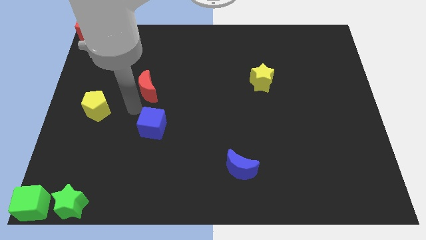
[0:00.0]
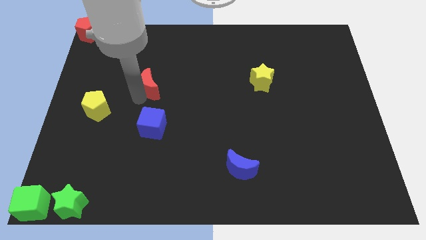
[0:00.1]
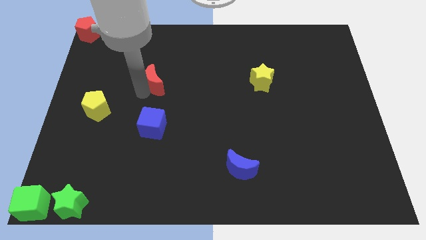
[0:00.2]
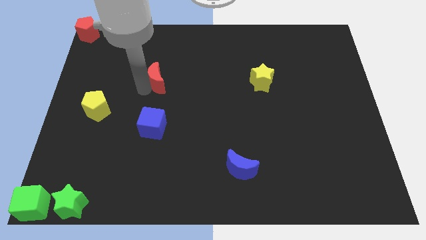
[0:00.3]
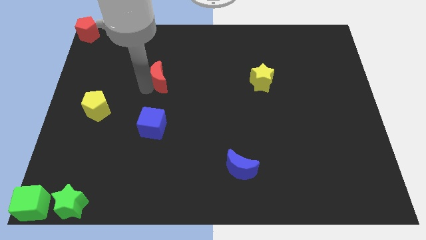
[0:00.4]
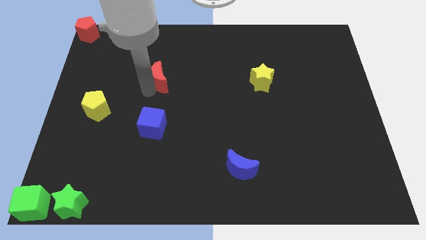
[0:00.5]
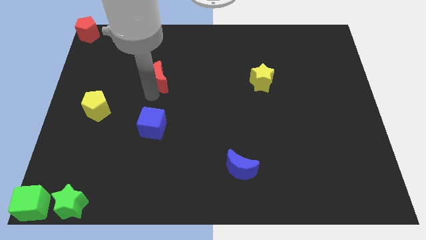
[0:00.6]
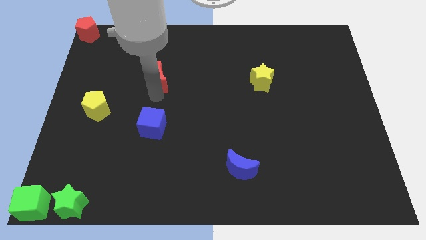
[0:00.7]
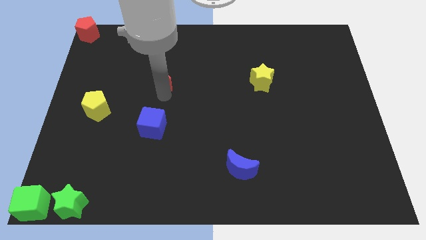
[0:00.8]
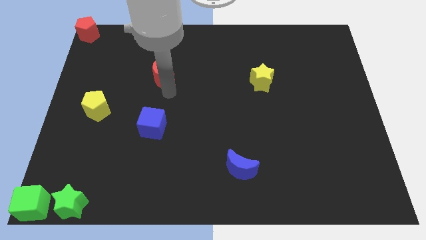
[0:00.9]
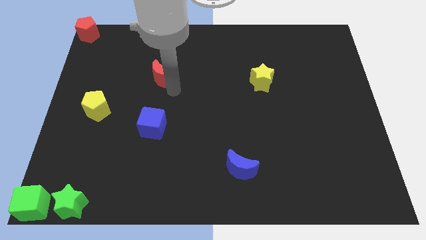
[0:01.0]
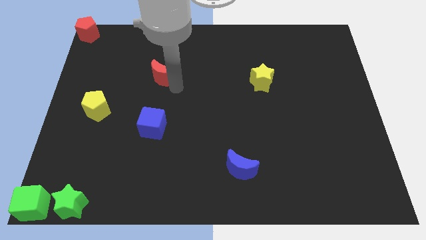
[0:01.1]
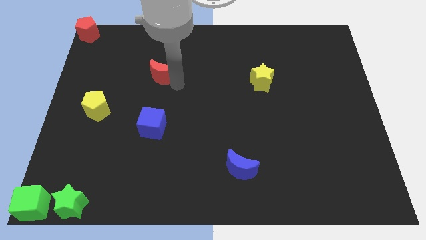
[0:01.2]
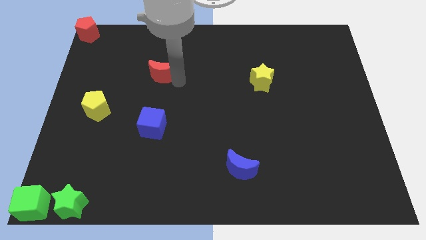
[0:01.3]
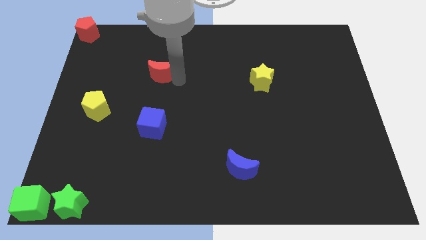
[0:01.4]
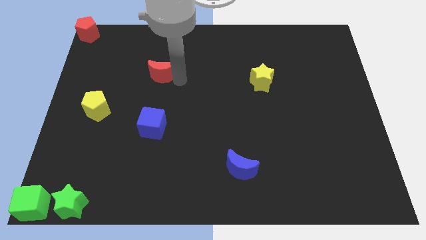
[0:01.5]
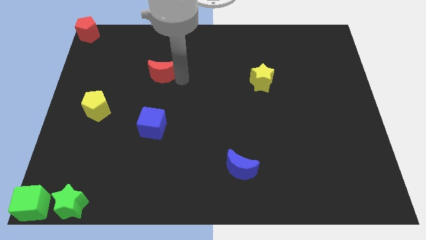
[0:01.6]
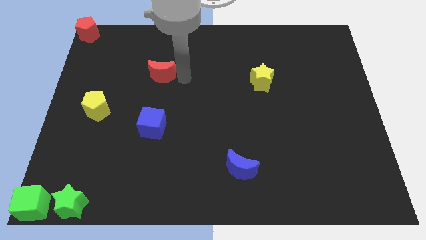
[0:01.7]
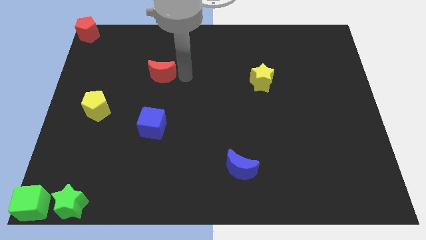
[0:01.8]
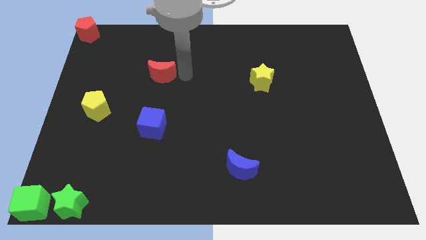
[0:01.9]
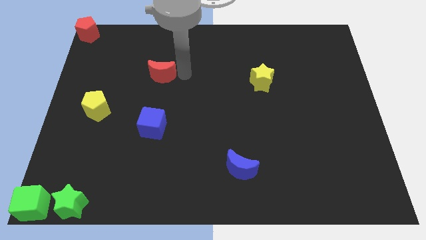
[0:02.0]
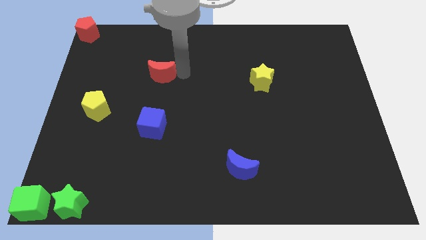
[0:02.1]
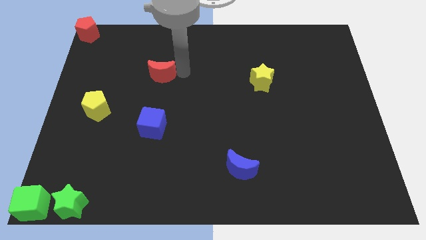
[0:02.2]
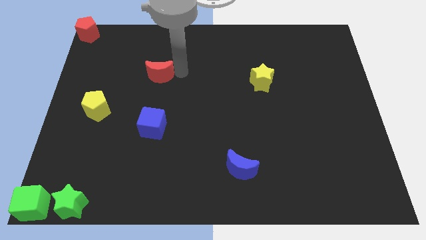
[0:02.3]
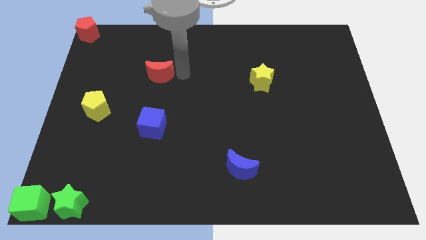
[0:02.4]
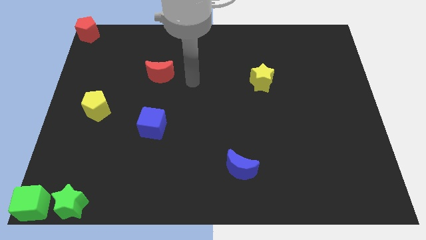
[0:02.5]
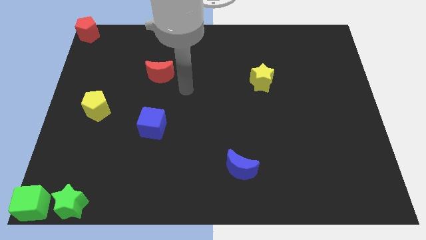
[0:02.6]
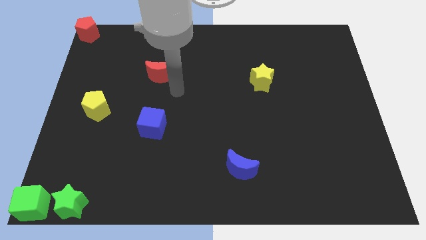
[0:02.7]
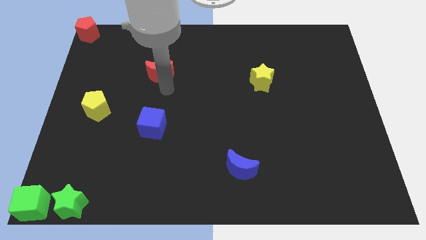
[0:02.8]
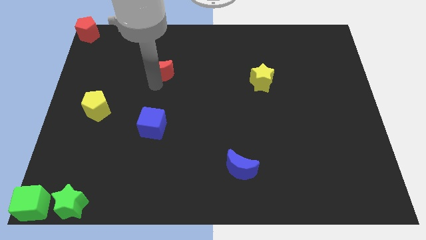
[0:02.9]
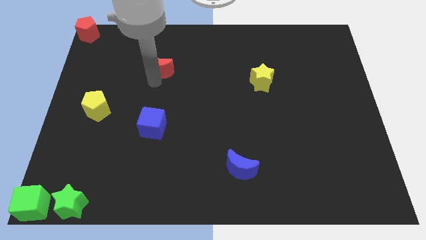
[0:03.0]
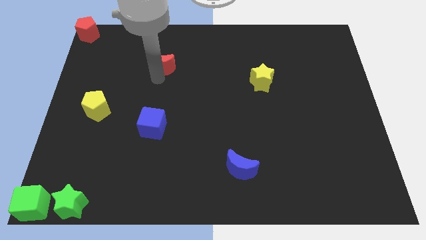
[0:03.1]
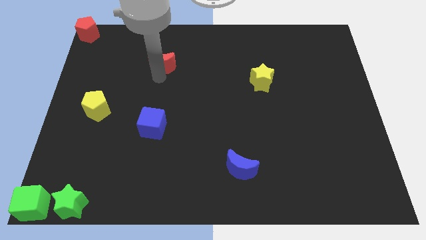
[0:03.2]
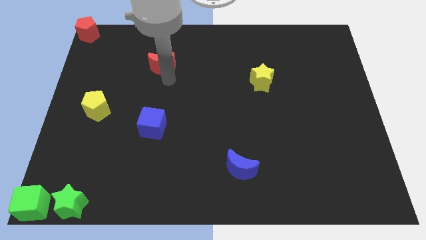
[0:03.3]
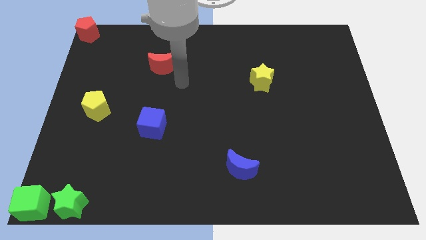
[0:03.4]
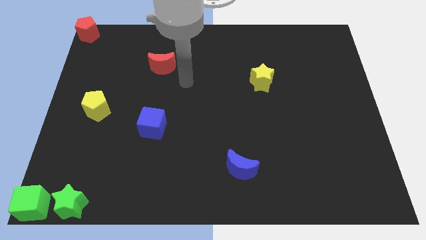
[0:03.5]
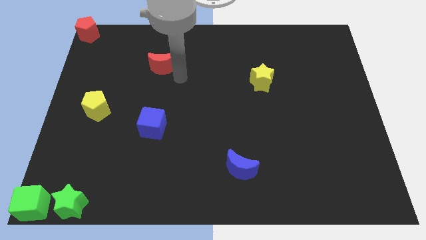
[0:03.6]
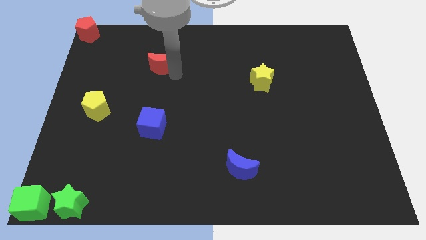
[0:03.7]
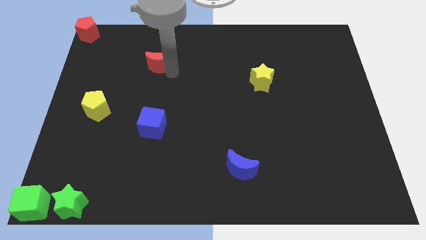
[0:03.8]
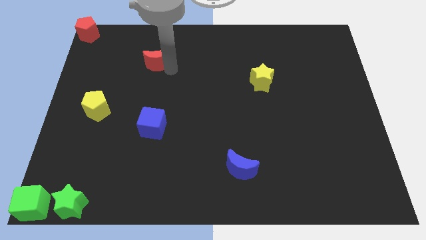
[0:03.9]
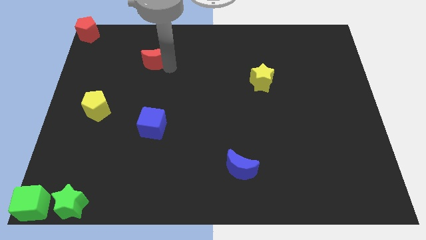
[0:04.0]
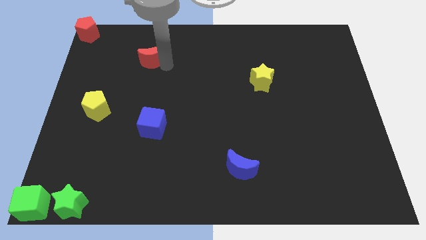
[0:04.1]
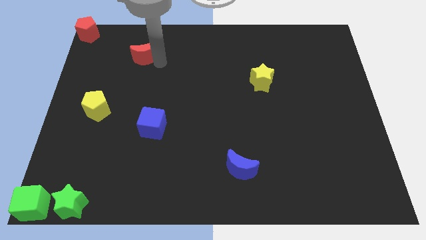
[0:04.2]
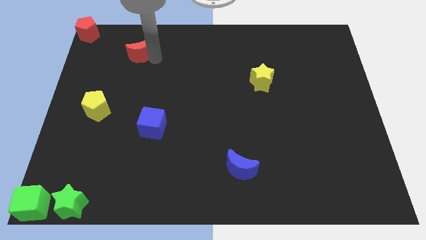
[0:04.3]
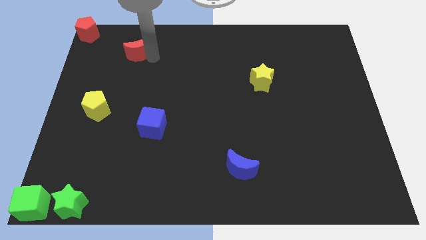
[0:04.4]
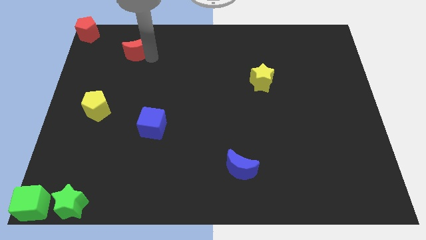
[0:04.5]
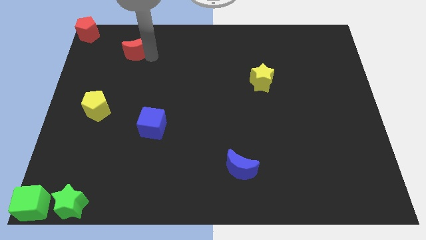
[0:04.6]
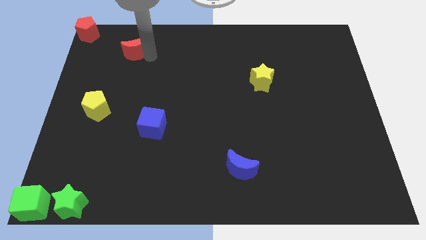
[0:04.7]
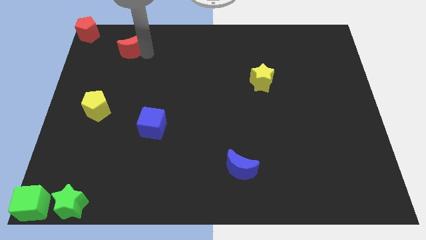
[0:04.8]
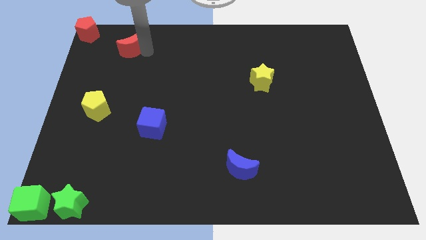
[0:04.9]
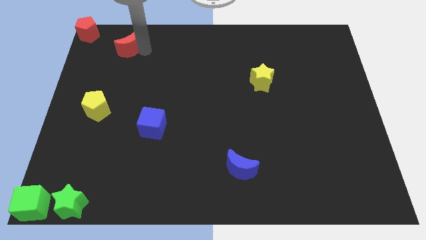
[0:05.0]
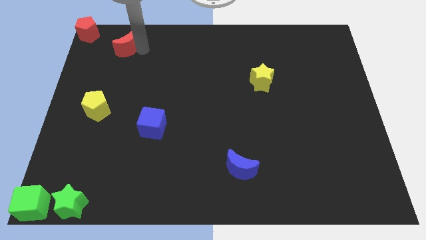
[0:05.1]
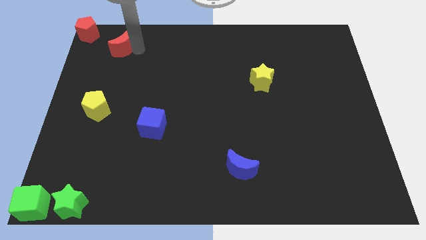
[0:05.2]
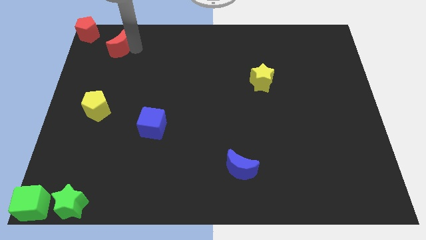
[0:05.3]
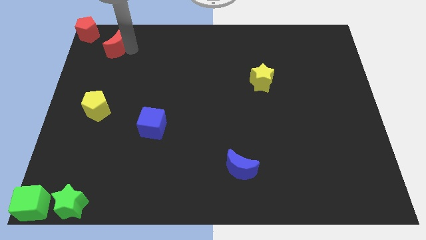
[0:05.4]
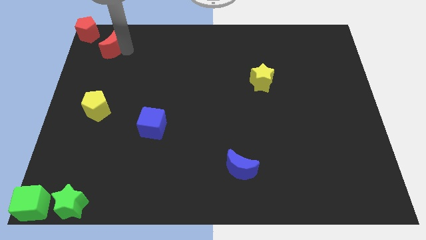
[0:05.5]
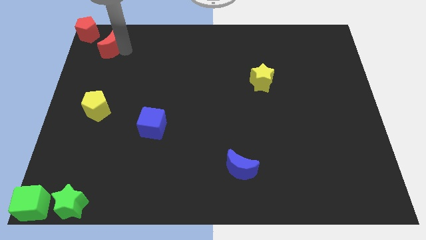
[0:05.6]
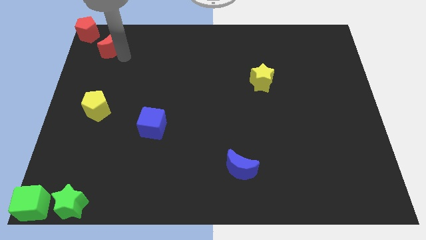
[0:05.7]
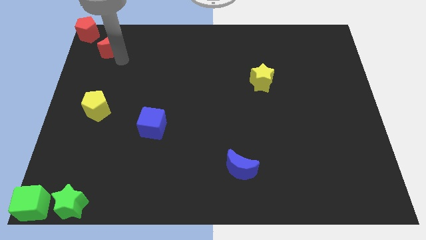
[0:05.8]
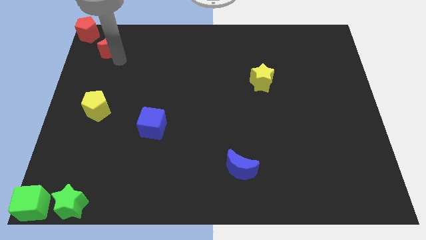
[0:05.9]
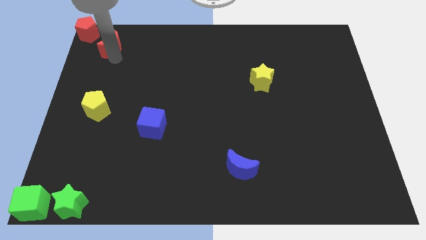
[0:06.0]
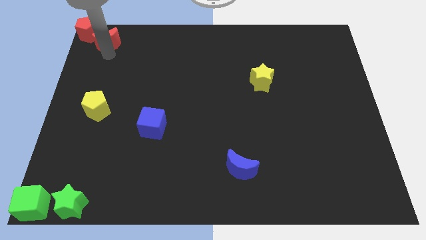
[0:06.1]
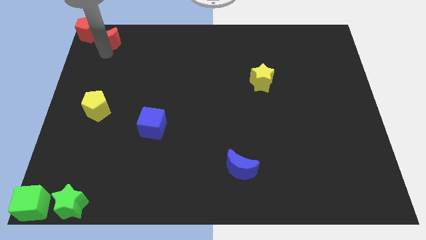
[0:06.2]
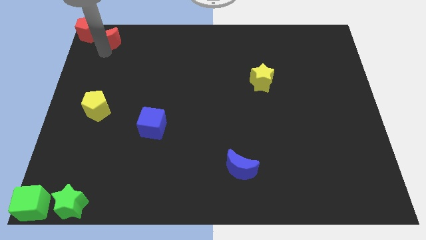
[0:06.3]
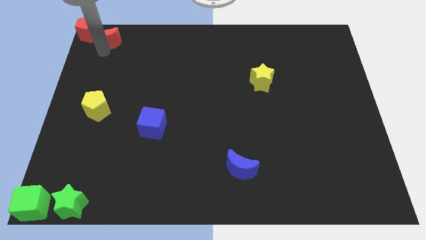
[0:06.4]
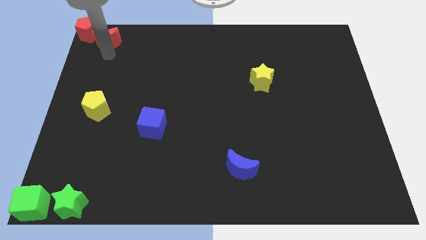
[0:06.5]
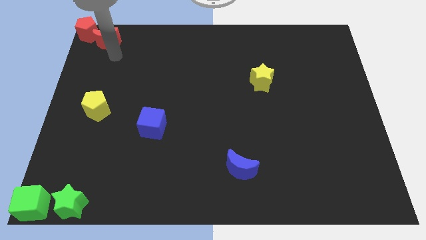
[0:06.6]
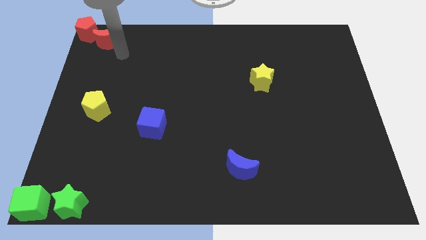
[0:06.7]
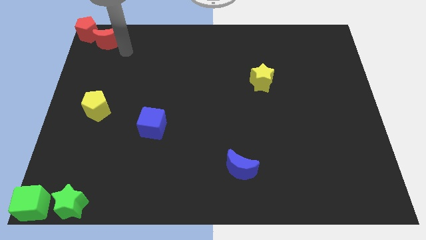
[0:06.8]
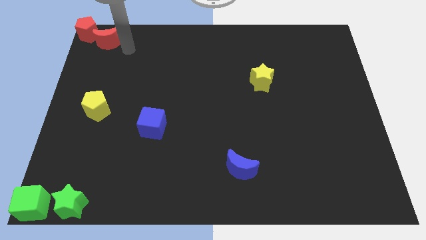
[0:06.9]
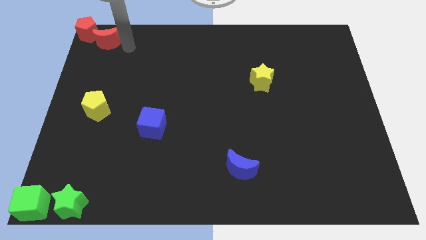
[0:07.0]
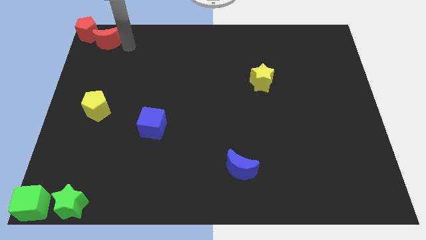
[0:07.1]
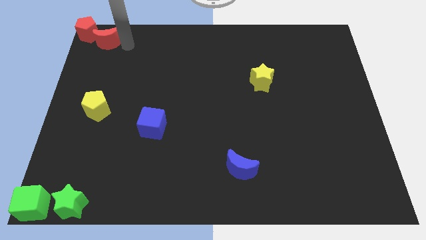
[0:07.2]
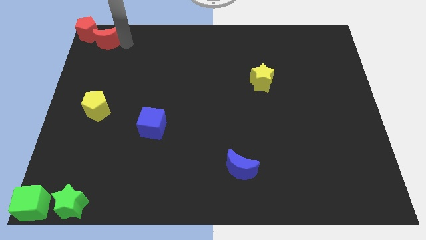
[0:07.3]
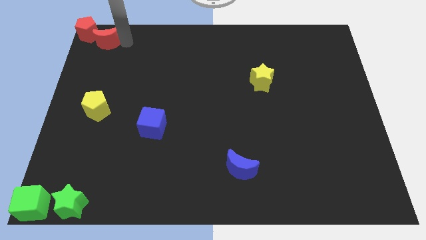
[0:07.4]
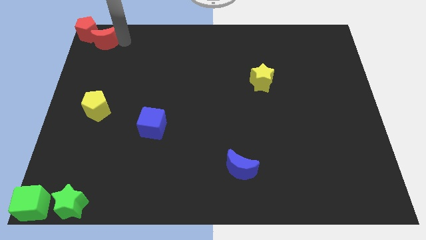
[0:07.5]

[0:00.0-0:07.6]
push the red crescent to the right side of the red pentagon

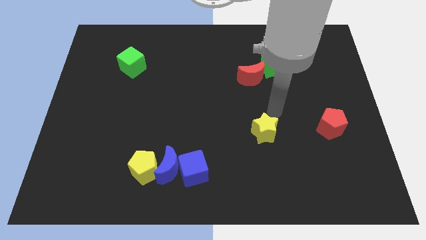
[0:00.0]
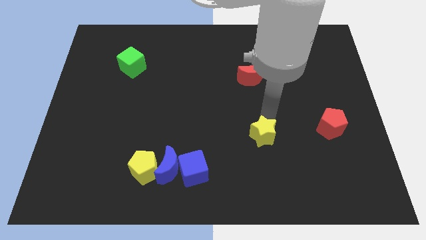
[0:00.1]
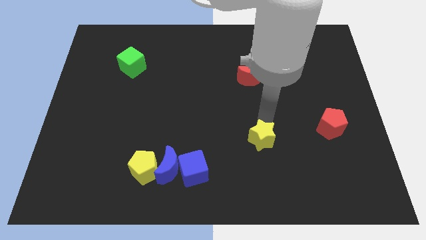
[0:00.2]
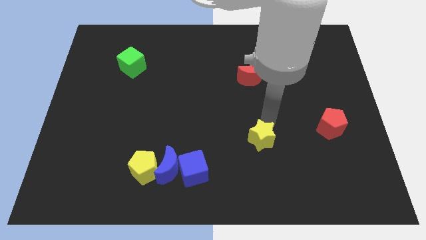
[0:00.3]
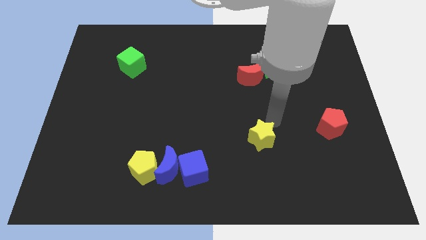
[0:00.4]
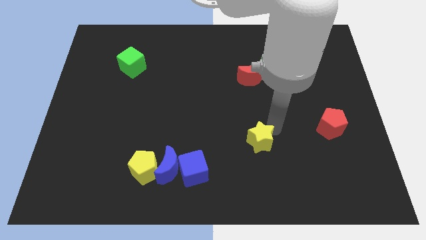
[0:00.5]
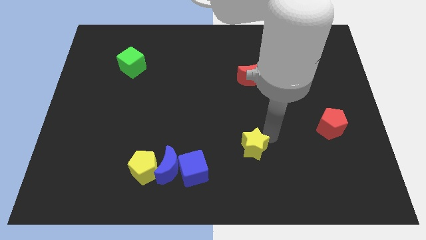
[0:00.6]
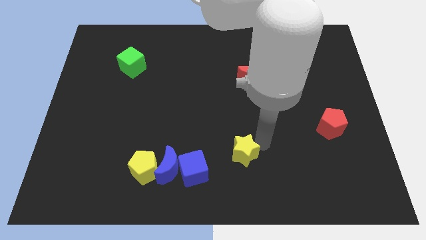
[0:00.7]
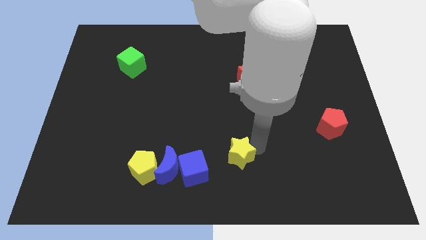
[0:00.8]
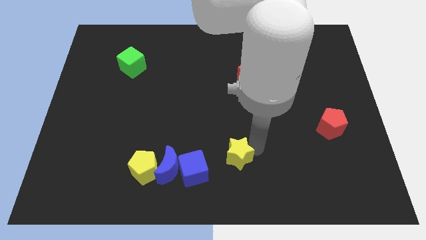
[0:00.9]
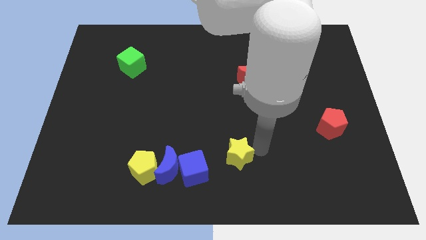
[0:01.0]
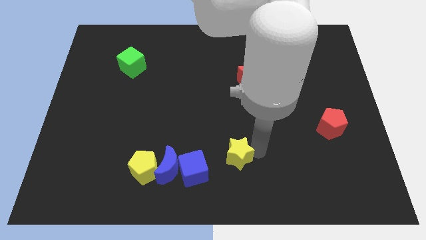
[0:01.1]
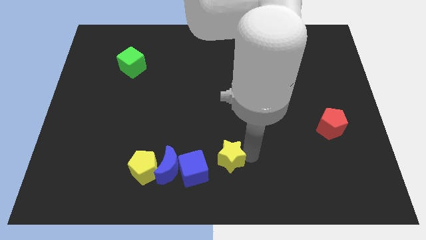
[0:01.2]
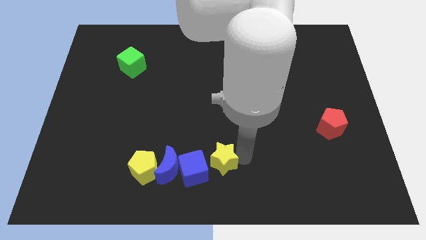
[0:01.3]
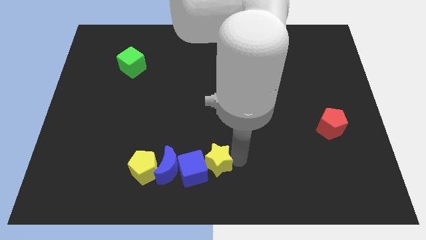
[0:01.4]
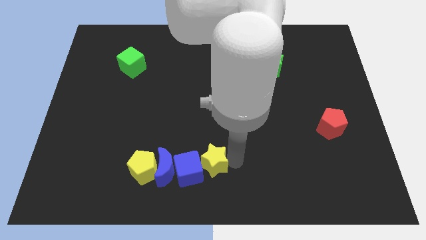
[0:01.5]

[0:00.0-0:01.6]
move the yellow star into the blue cube
